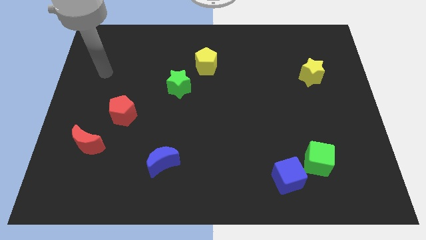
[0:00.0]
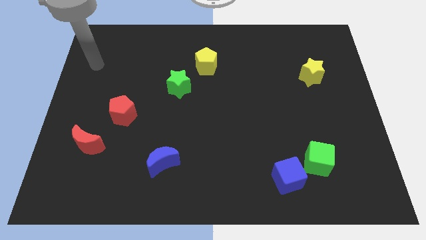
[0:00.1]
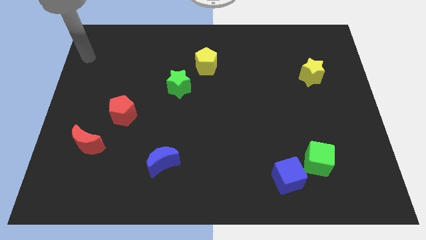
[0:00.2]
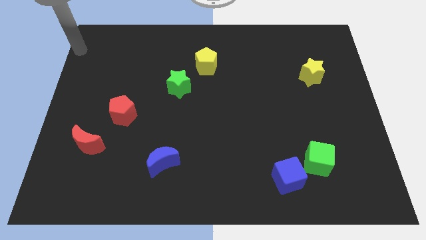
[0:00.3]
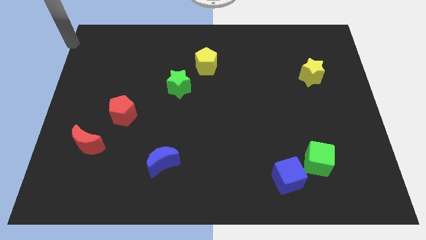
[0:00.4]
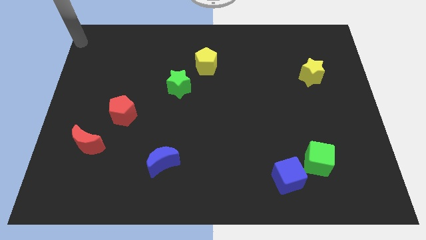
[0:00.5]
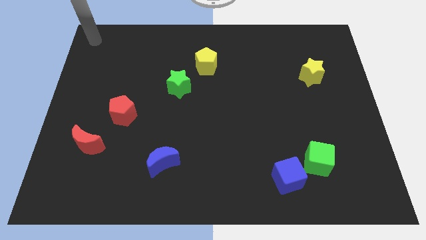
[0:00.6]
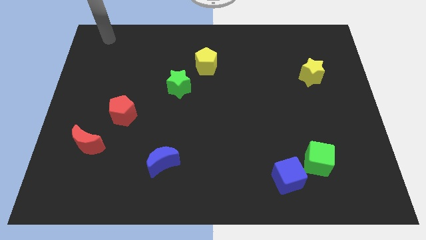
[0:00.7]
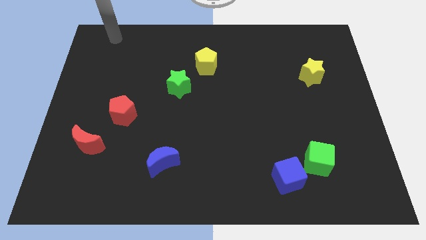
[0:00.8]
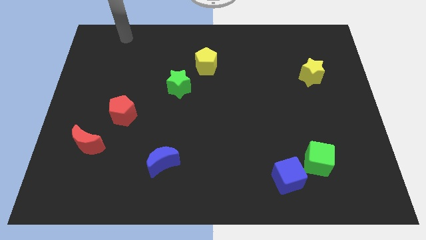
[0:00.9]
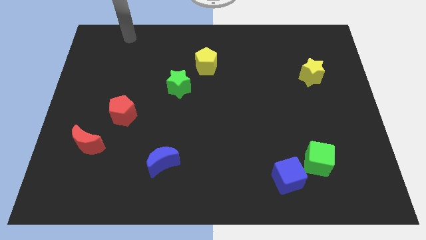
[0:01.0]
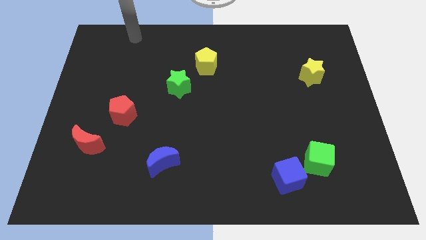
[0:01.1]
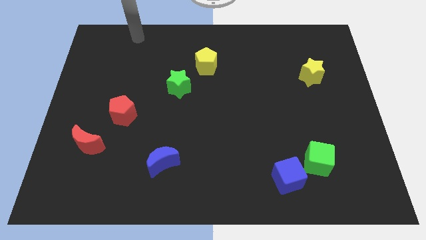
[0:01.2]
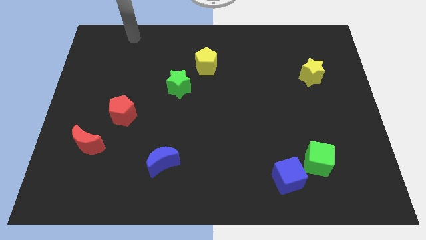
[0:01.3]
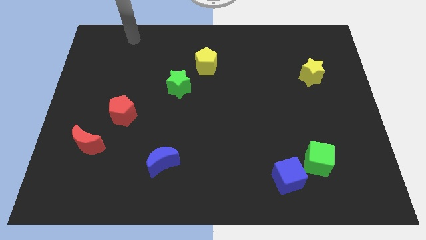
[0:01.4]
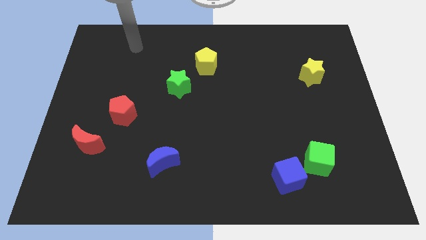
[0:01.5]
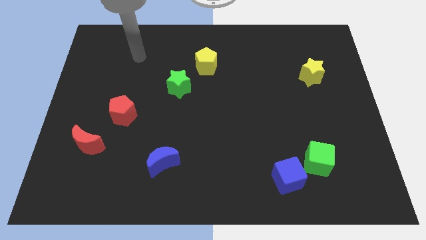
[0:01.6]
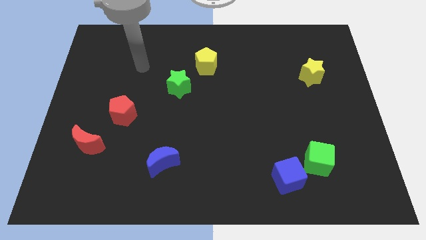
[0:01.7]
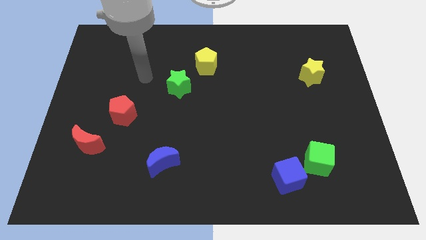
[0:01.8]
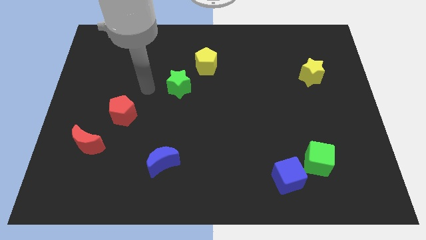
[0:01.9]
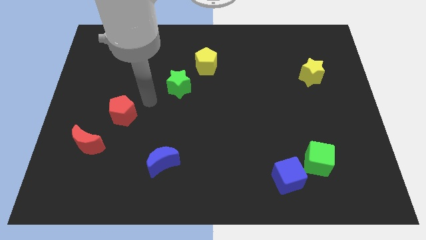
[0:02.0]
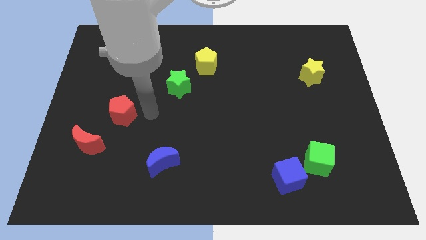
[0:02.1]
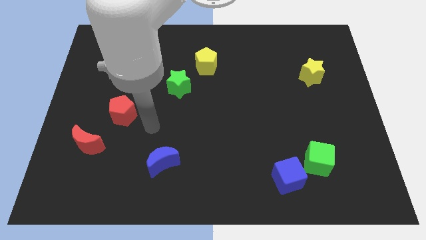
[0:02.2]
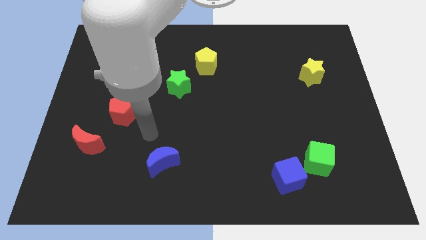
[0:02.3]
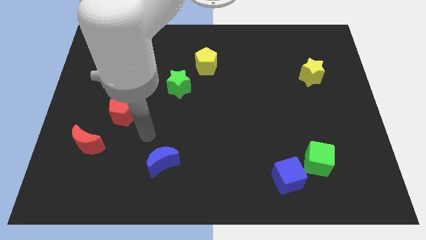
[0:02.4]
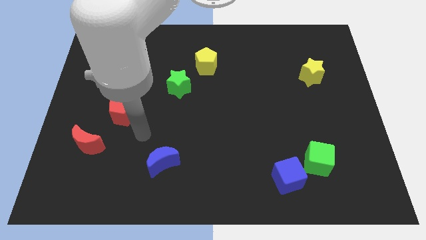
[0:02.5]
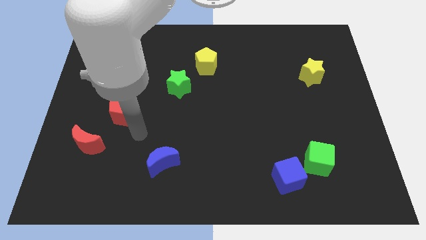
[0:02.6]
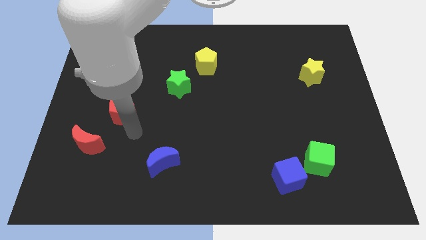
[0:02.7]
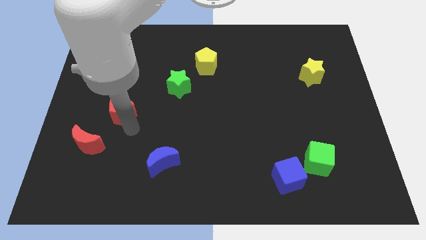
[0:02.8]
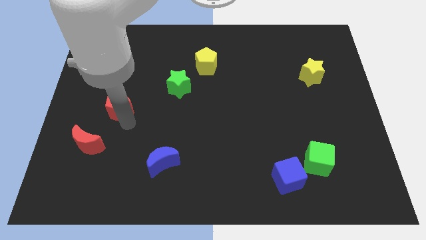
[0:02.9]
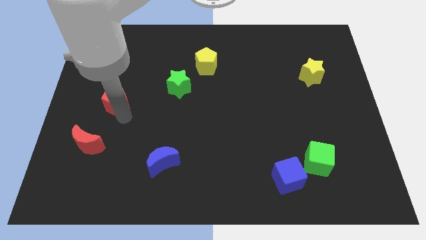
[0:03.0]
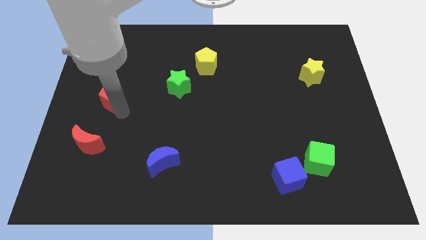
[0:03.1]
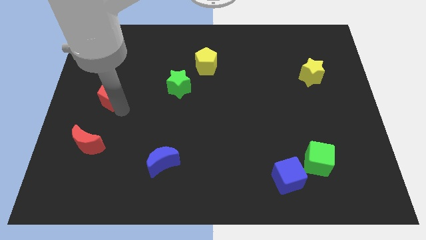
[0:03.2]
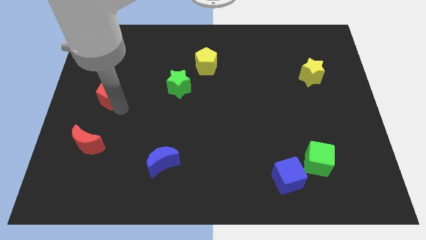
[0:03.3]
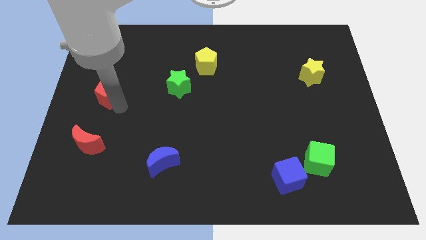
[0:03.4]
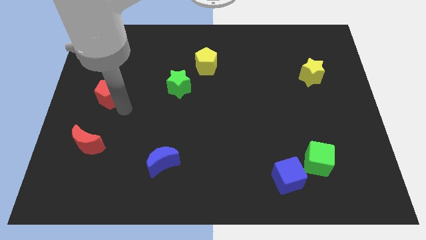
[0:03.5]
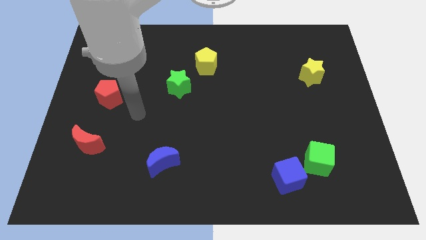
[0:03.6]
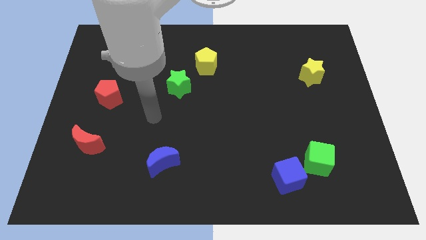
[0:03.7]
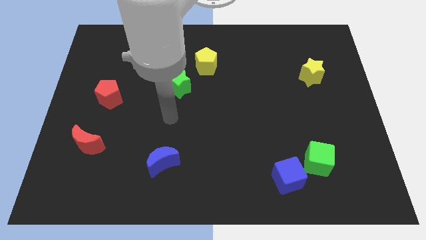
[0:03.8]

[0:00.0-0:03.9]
move the red pentagon slightly to the top left side

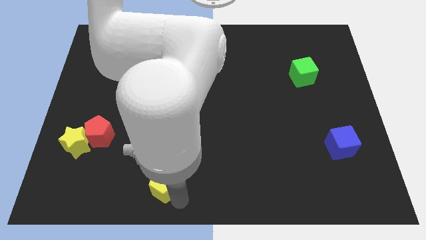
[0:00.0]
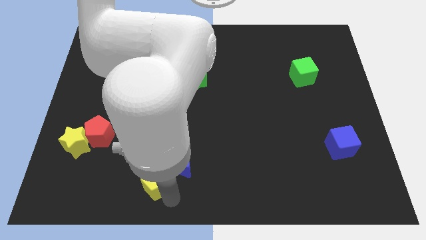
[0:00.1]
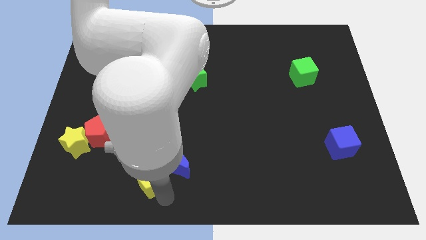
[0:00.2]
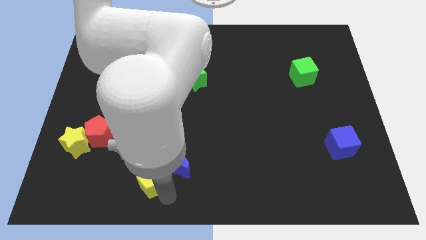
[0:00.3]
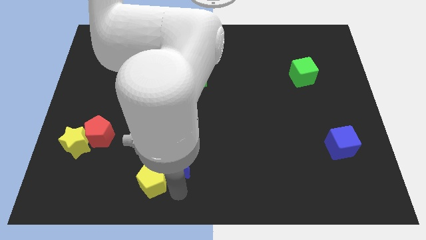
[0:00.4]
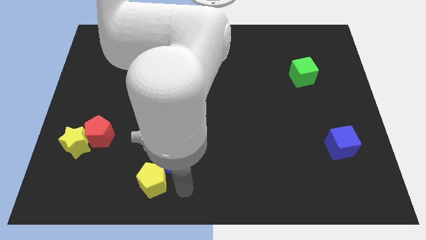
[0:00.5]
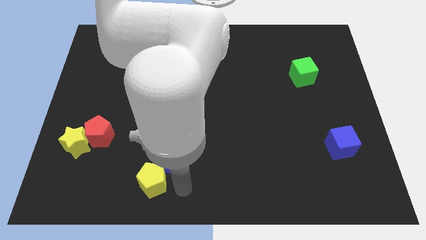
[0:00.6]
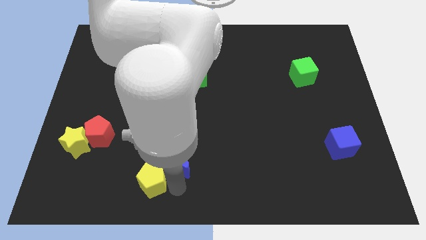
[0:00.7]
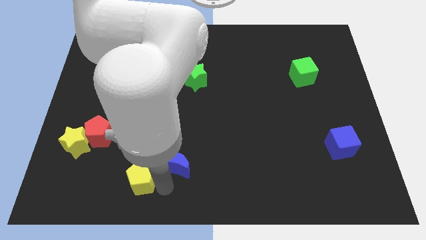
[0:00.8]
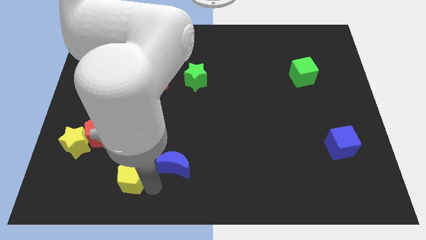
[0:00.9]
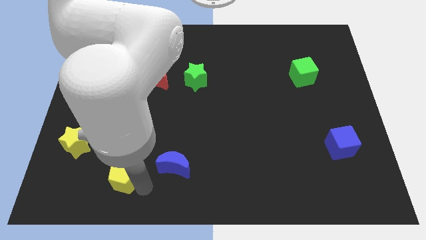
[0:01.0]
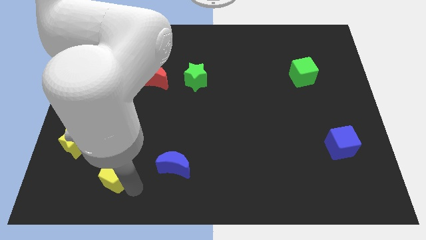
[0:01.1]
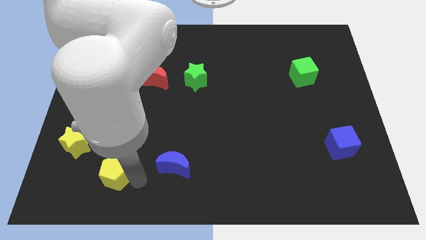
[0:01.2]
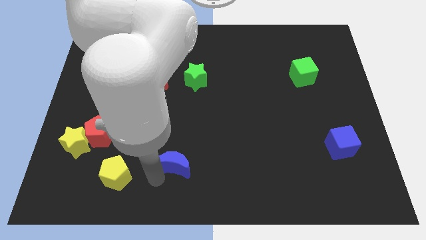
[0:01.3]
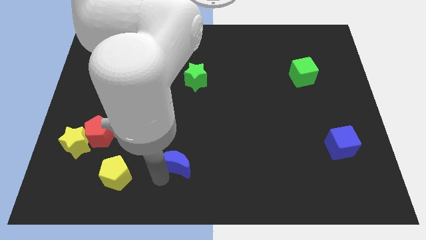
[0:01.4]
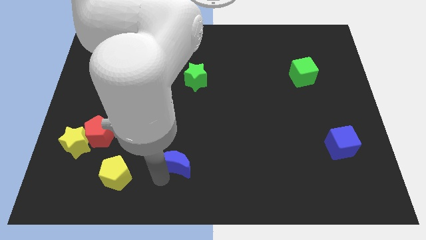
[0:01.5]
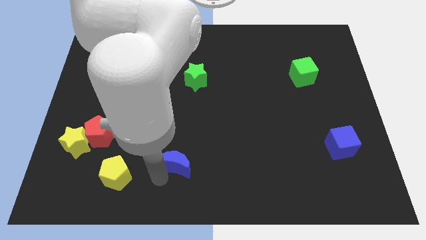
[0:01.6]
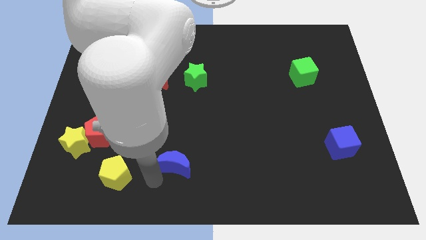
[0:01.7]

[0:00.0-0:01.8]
separate the yellow pentagon from the blue crescent

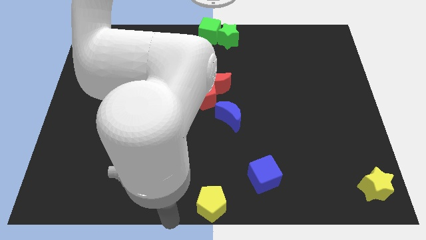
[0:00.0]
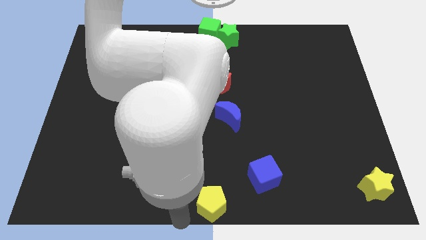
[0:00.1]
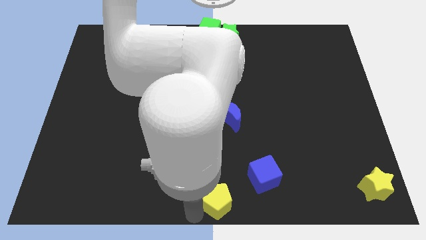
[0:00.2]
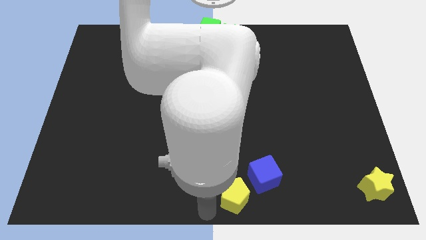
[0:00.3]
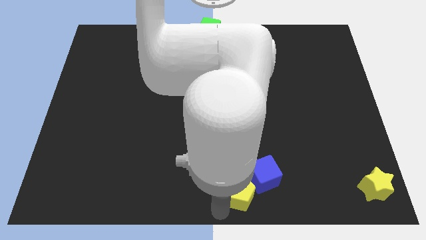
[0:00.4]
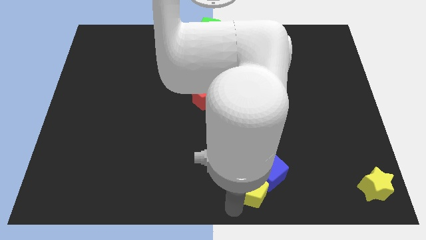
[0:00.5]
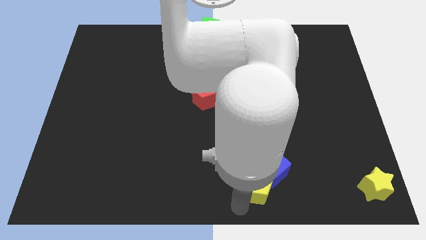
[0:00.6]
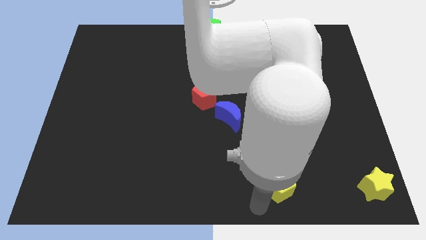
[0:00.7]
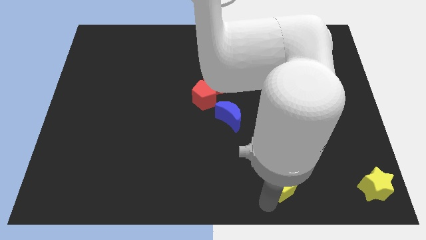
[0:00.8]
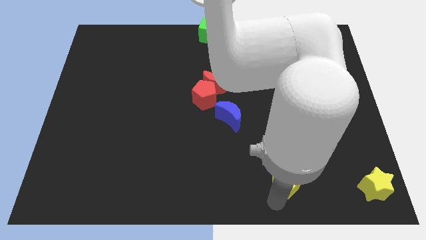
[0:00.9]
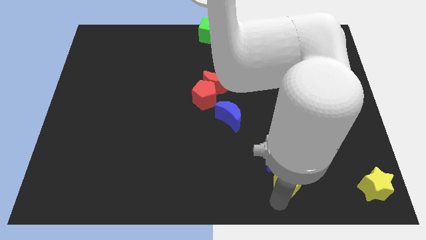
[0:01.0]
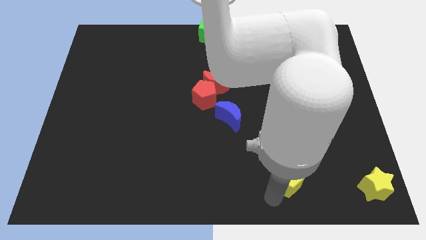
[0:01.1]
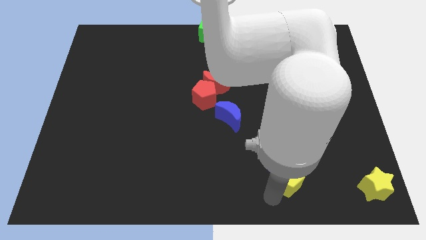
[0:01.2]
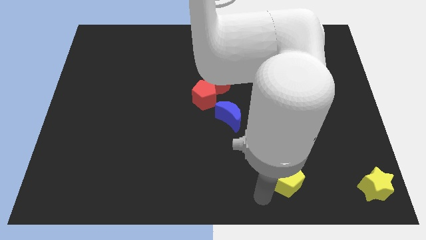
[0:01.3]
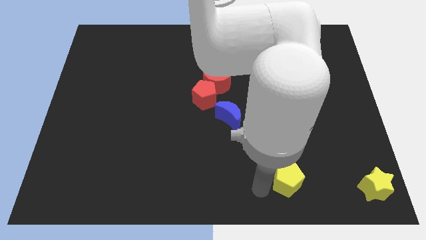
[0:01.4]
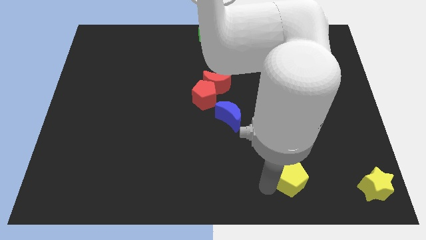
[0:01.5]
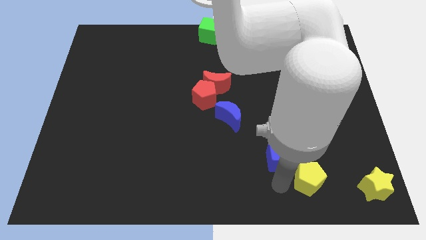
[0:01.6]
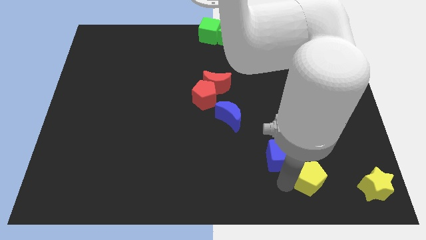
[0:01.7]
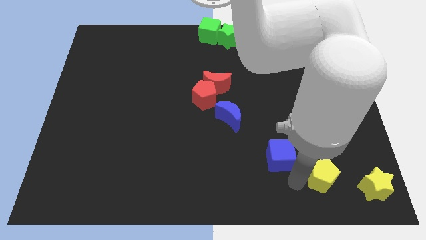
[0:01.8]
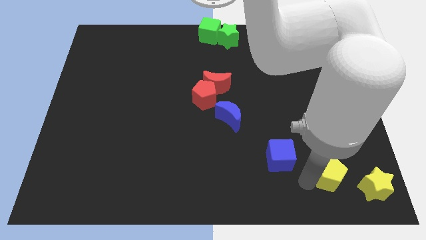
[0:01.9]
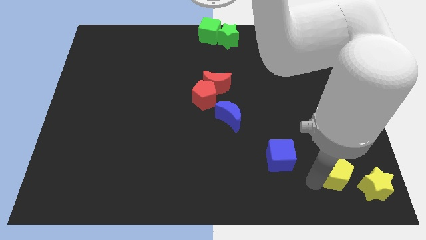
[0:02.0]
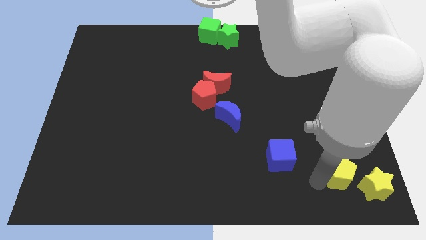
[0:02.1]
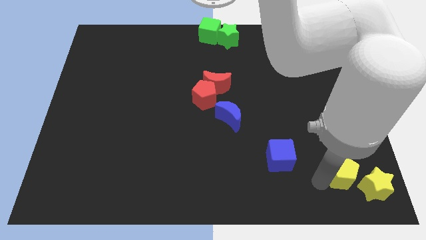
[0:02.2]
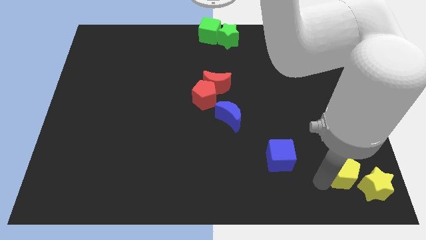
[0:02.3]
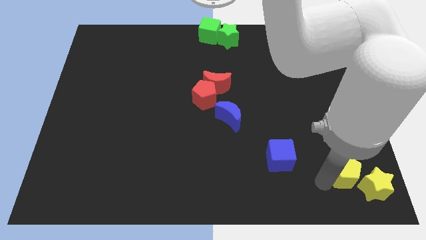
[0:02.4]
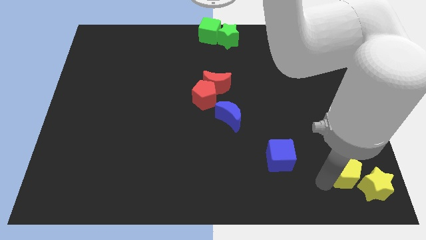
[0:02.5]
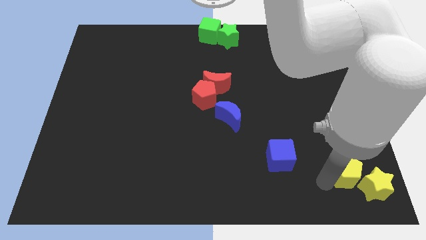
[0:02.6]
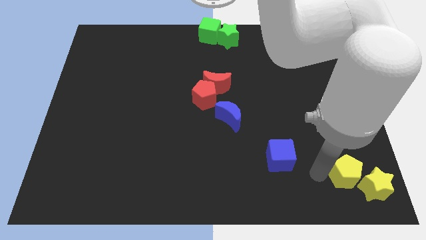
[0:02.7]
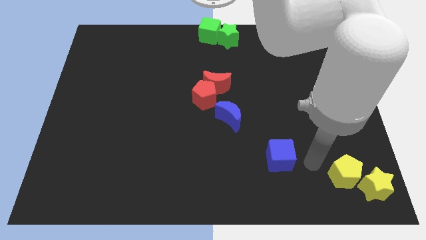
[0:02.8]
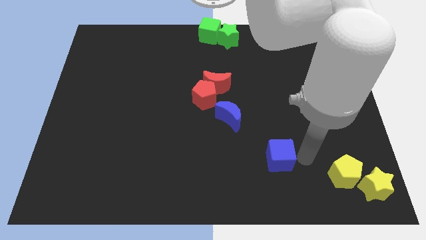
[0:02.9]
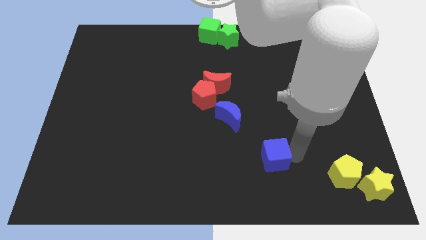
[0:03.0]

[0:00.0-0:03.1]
push the yellow pentagon close to the yellow star

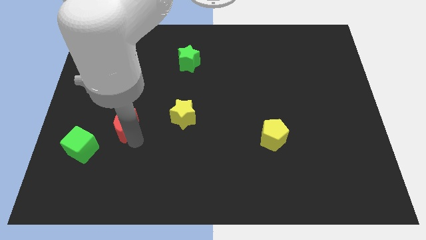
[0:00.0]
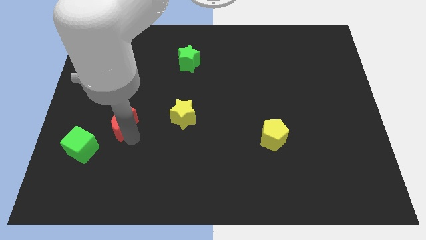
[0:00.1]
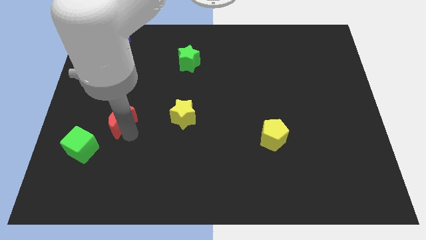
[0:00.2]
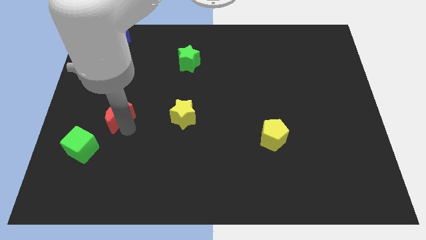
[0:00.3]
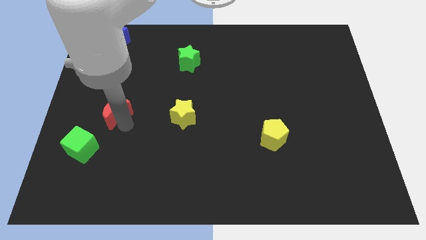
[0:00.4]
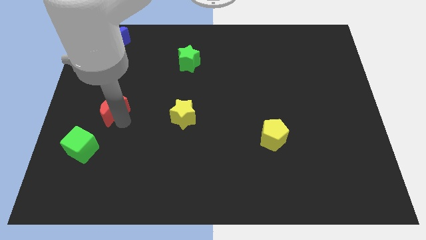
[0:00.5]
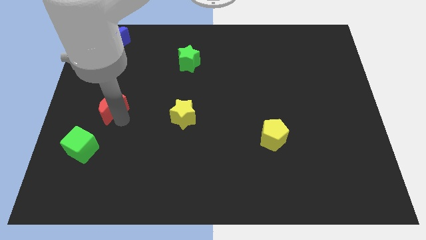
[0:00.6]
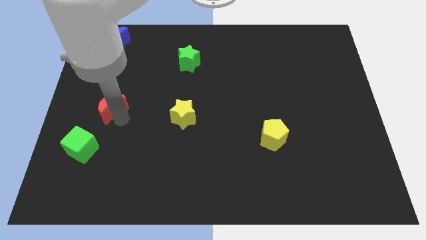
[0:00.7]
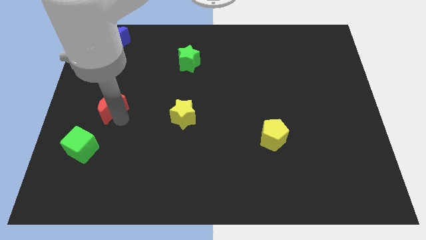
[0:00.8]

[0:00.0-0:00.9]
move the red crescent above the green cube
